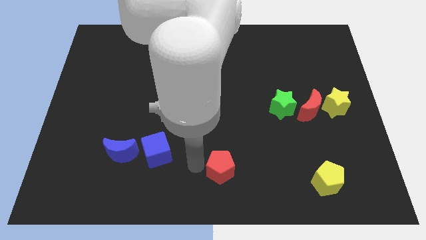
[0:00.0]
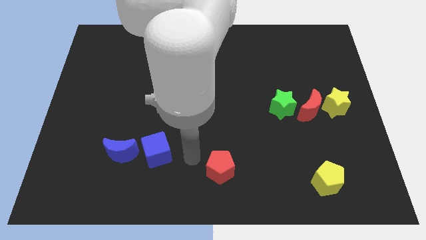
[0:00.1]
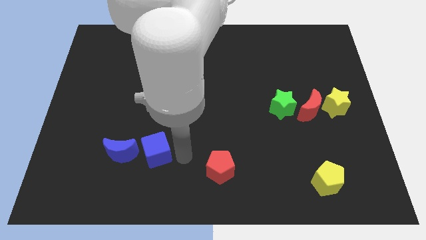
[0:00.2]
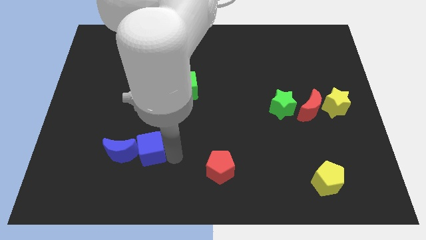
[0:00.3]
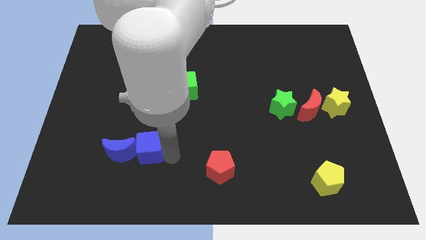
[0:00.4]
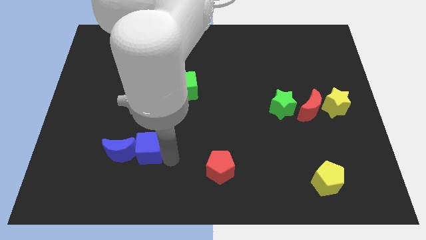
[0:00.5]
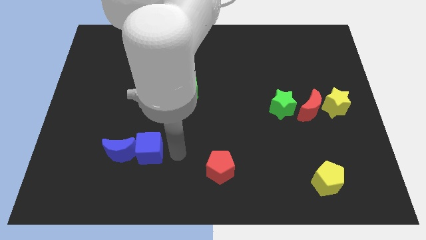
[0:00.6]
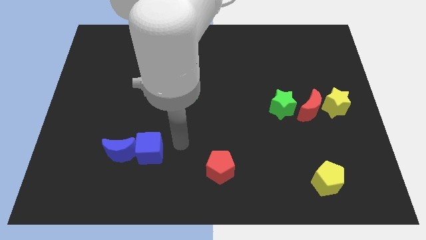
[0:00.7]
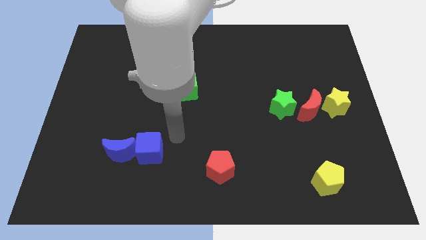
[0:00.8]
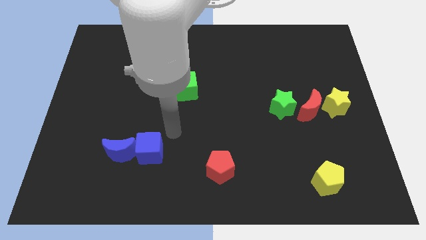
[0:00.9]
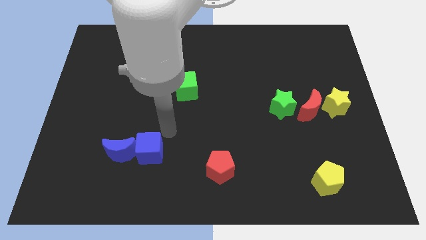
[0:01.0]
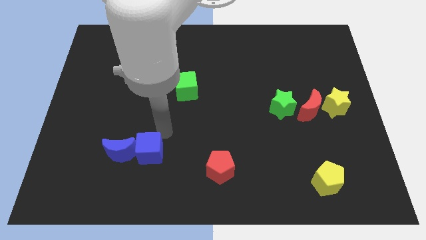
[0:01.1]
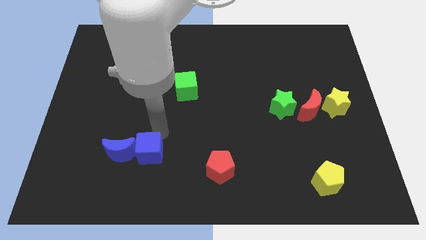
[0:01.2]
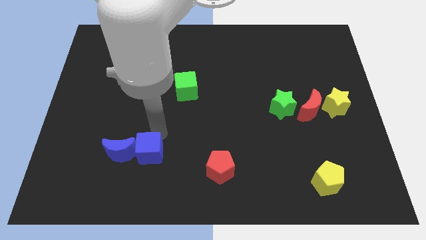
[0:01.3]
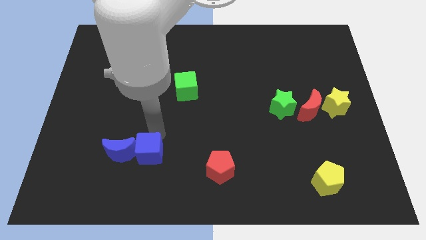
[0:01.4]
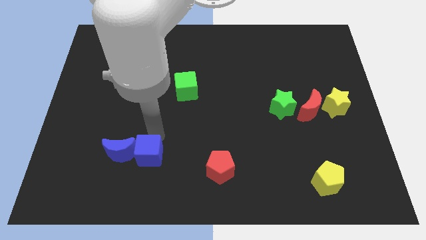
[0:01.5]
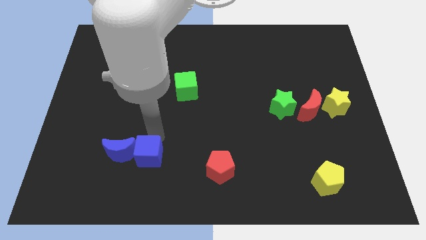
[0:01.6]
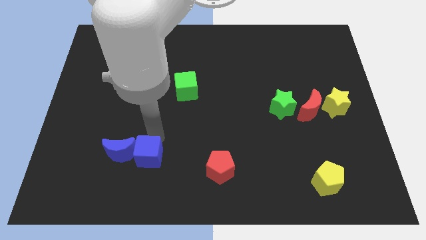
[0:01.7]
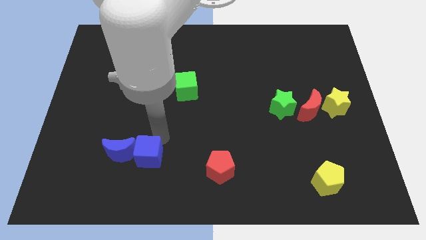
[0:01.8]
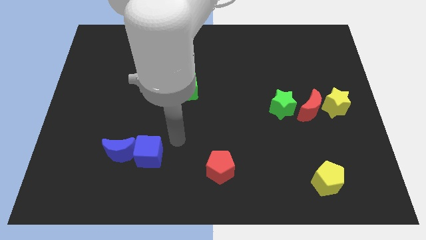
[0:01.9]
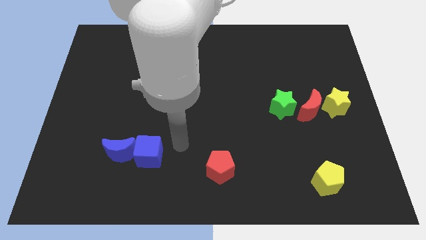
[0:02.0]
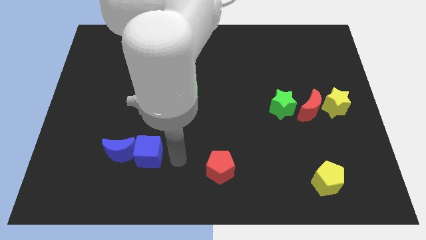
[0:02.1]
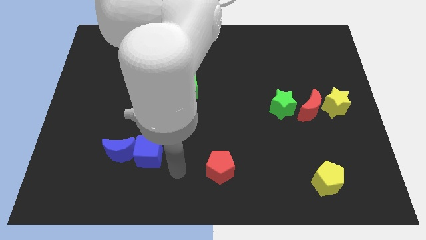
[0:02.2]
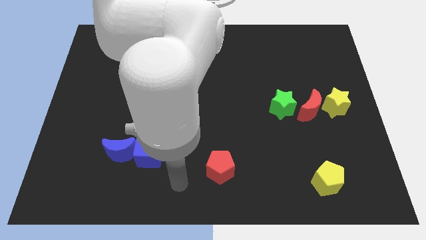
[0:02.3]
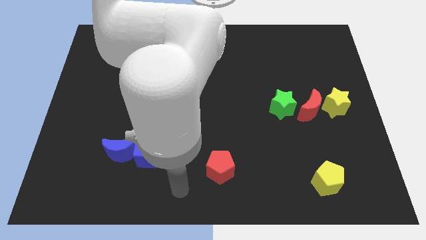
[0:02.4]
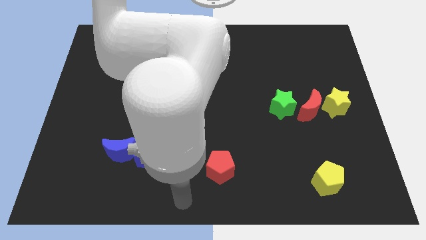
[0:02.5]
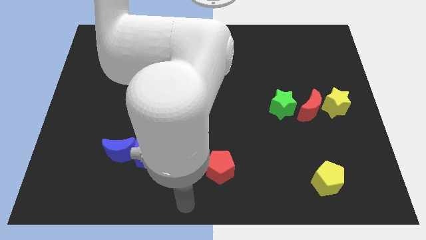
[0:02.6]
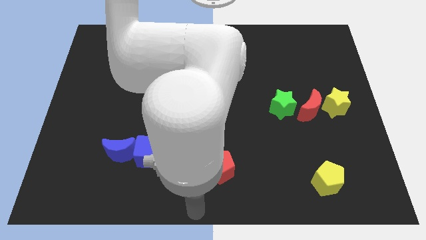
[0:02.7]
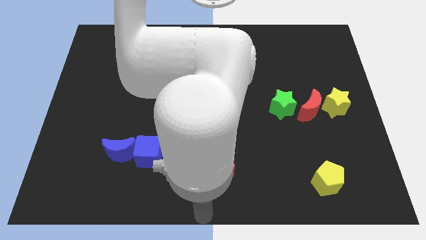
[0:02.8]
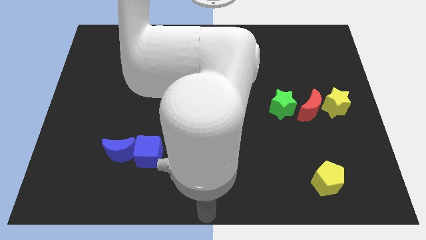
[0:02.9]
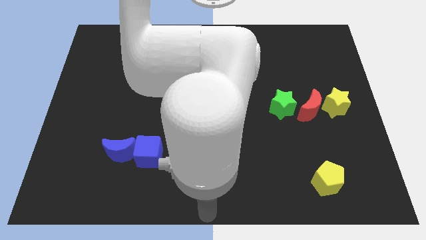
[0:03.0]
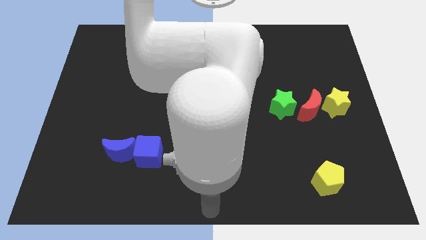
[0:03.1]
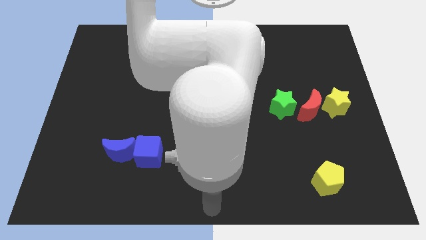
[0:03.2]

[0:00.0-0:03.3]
slightly push the blue cube close to the blue crescent

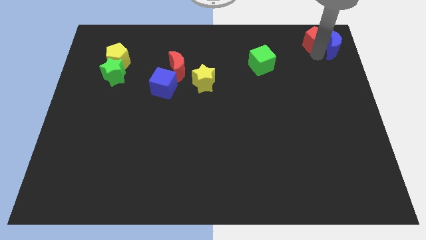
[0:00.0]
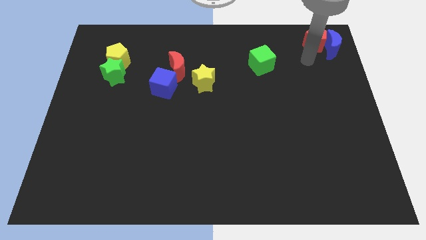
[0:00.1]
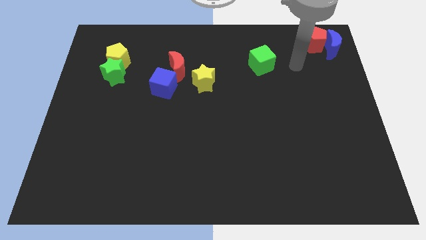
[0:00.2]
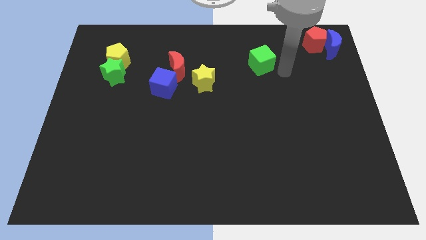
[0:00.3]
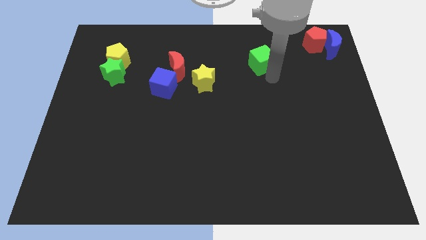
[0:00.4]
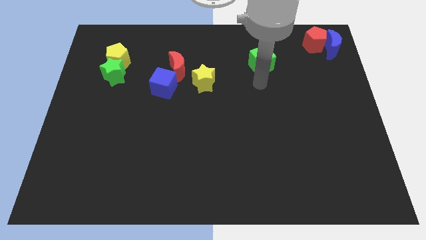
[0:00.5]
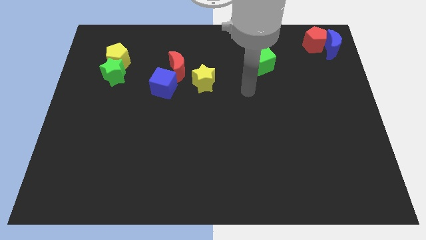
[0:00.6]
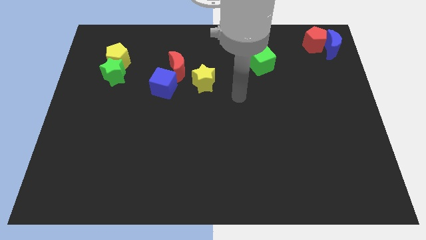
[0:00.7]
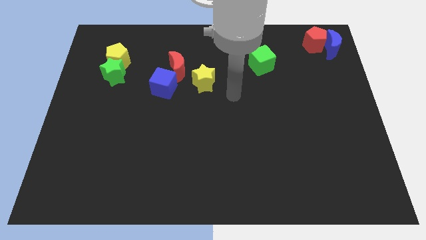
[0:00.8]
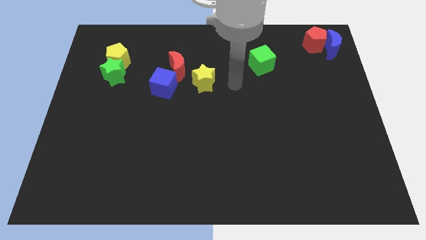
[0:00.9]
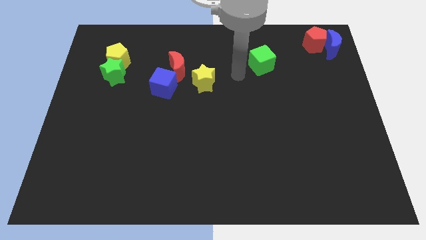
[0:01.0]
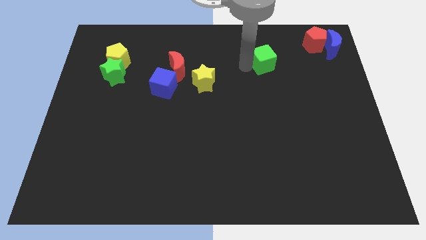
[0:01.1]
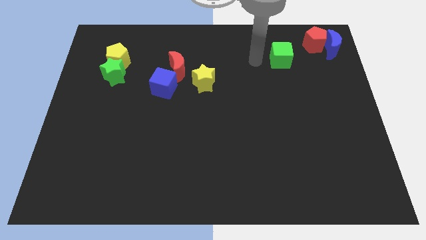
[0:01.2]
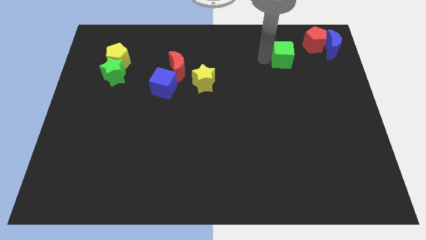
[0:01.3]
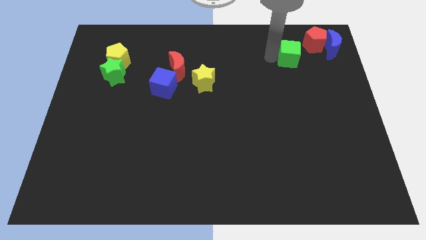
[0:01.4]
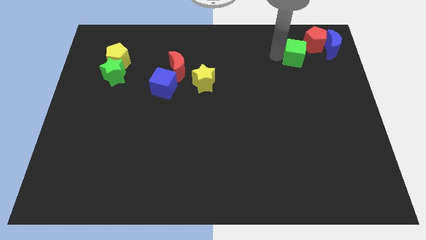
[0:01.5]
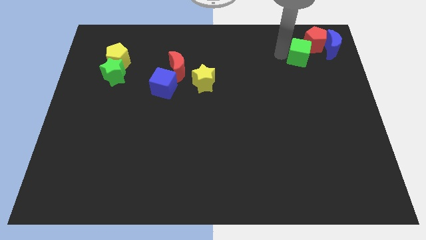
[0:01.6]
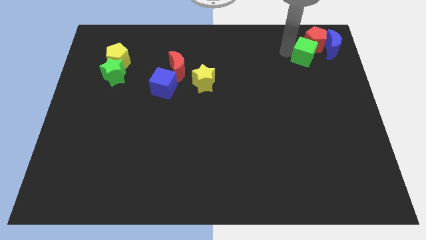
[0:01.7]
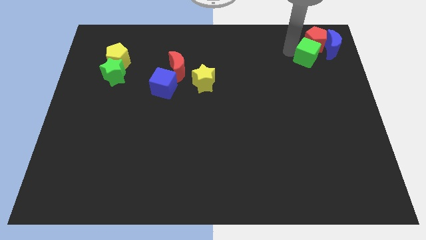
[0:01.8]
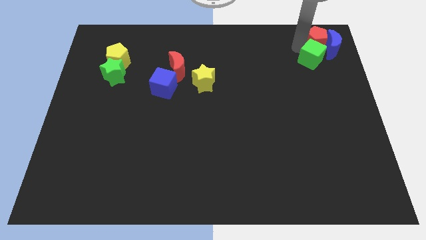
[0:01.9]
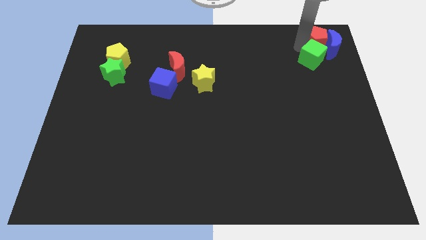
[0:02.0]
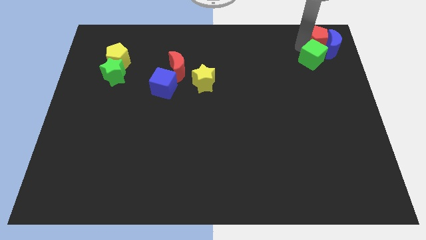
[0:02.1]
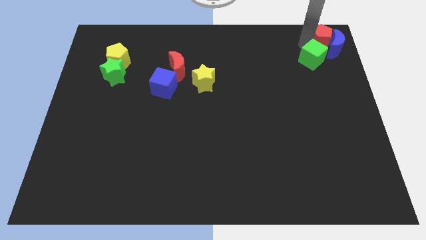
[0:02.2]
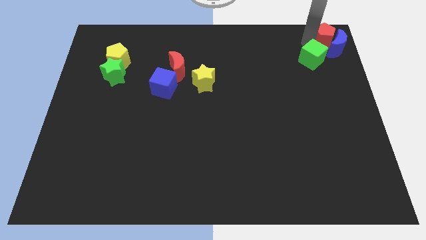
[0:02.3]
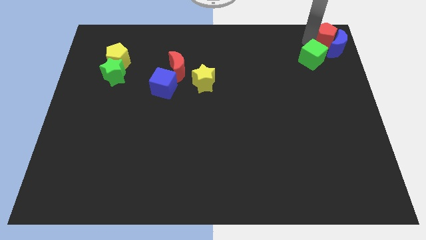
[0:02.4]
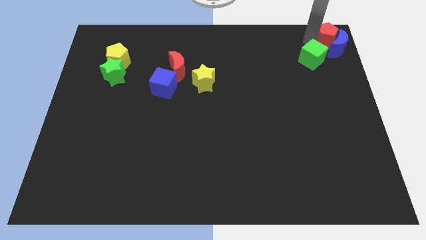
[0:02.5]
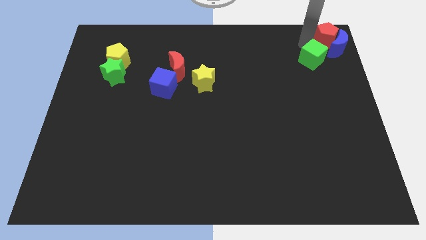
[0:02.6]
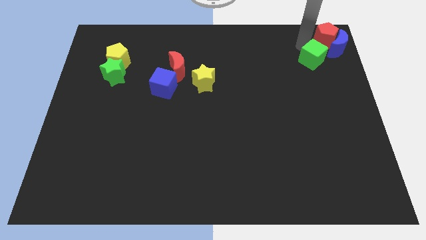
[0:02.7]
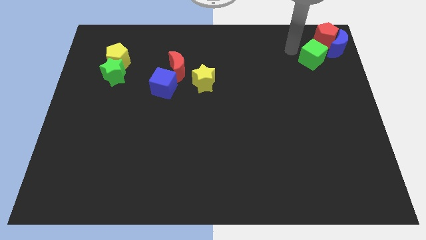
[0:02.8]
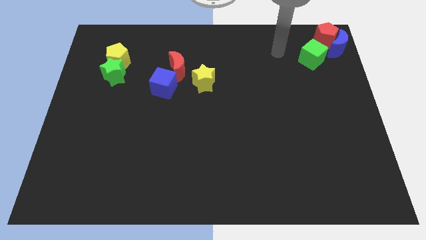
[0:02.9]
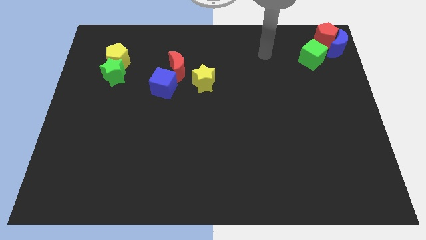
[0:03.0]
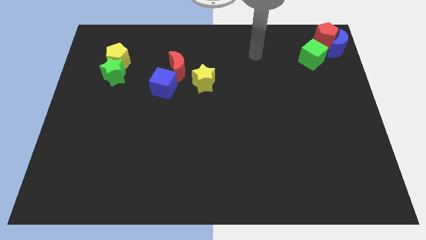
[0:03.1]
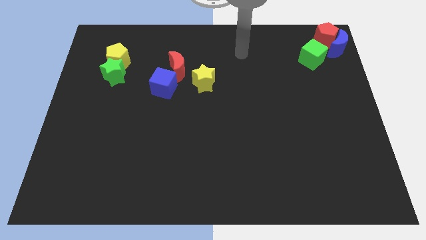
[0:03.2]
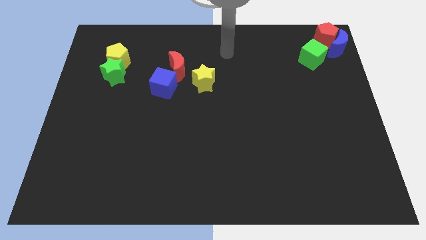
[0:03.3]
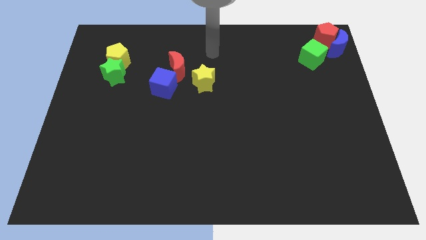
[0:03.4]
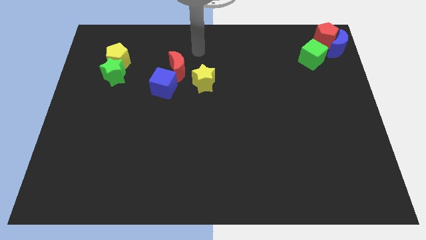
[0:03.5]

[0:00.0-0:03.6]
move the green cube towards red and blue crescent to the top right of the board

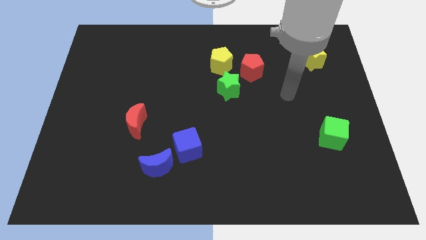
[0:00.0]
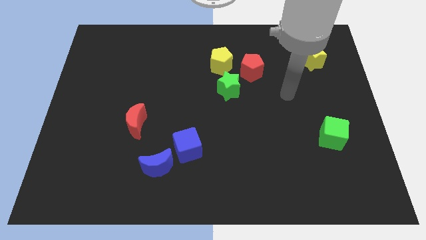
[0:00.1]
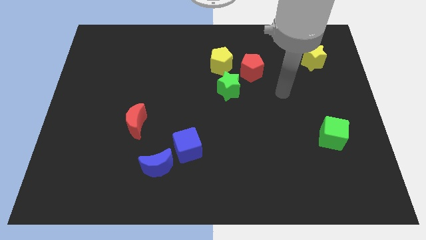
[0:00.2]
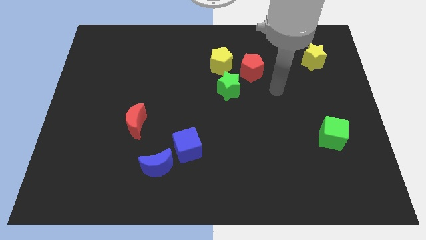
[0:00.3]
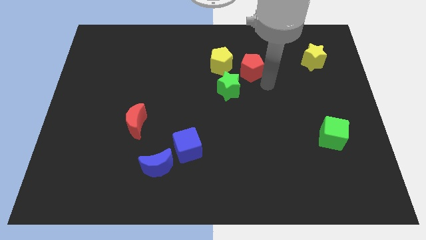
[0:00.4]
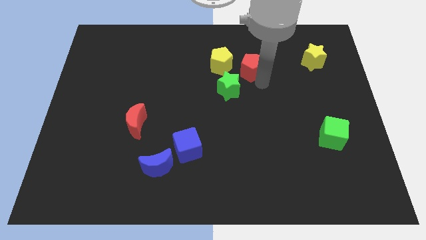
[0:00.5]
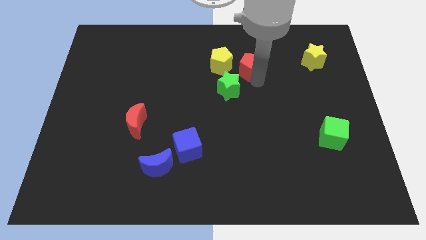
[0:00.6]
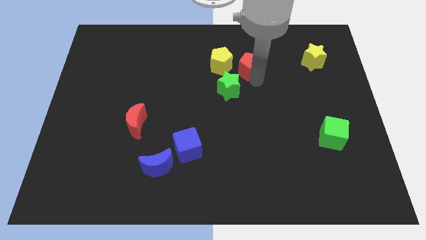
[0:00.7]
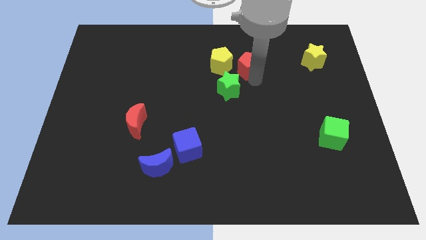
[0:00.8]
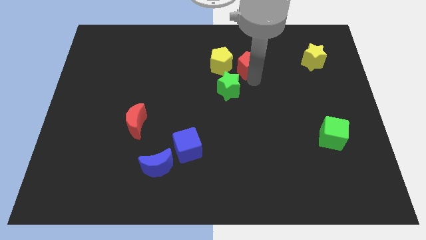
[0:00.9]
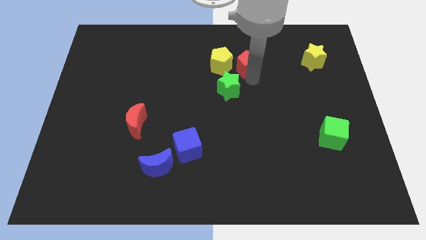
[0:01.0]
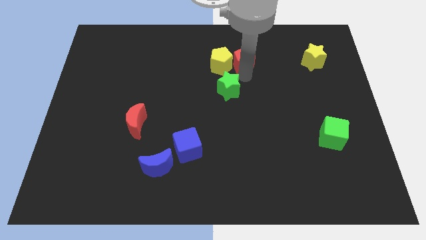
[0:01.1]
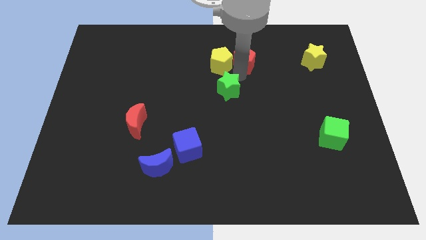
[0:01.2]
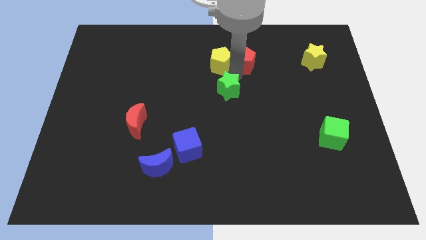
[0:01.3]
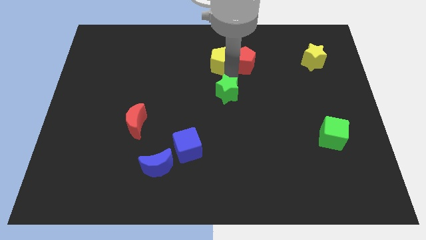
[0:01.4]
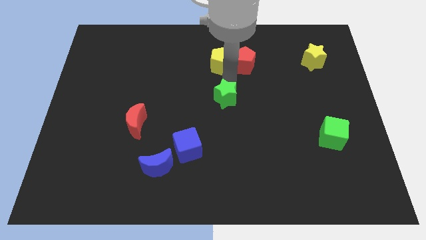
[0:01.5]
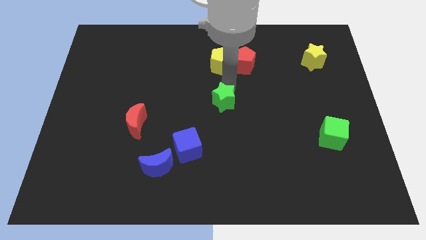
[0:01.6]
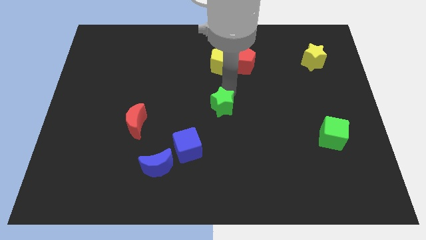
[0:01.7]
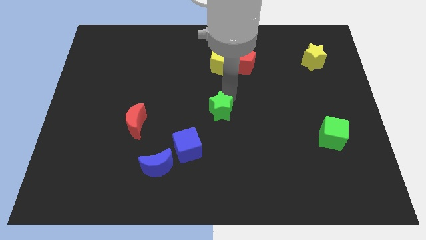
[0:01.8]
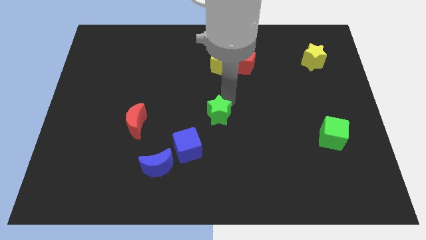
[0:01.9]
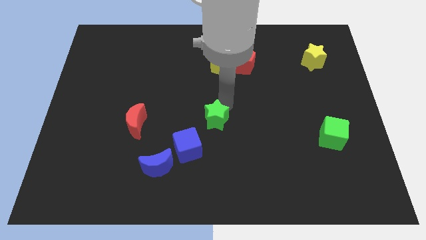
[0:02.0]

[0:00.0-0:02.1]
move the green star to the center of the board
